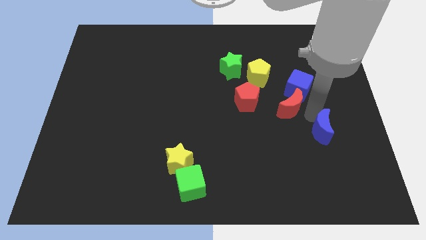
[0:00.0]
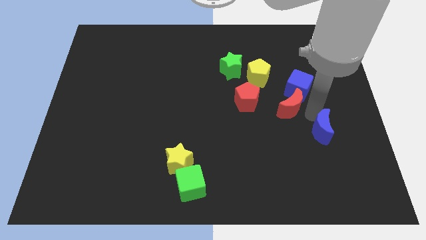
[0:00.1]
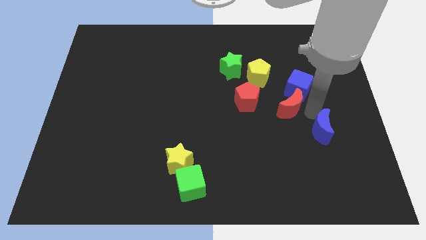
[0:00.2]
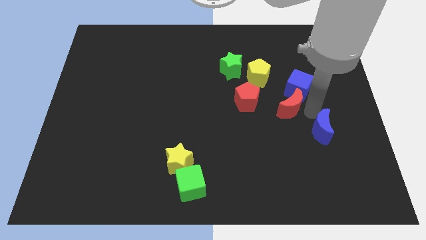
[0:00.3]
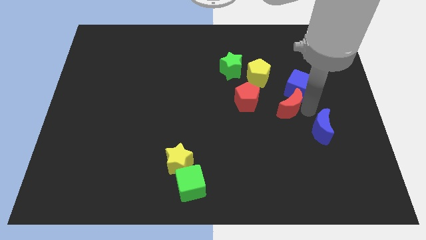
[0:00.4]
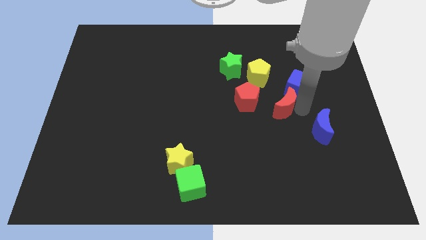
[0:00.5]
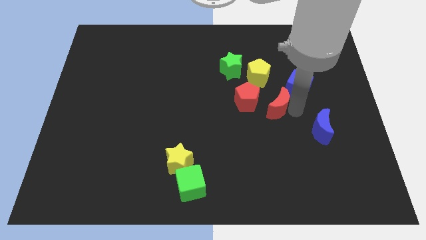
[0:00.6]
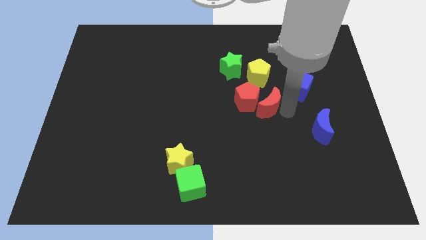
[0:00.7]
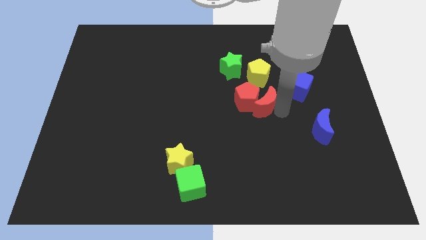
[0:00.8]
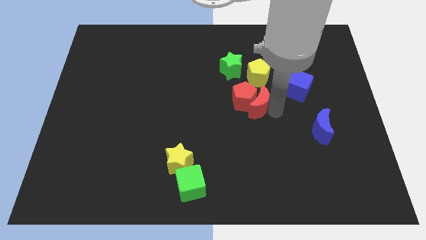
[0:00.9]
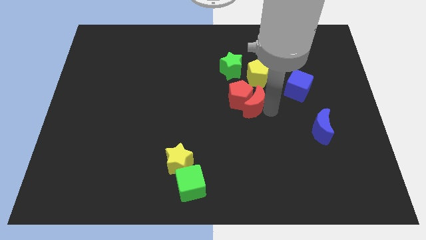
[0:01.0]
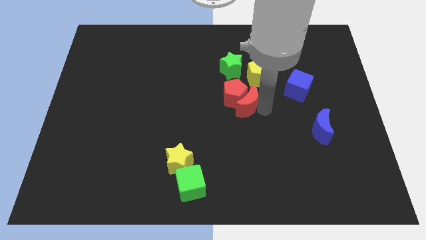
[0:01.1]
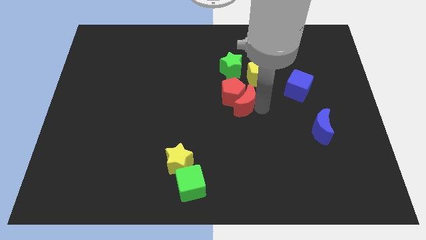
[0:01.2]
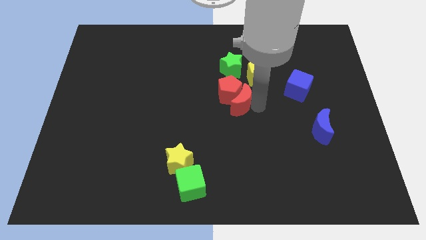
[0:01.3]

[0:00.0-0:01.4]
group up the red blocks below the green star

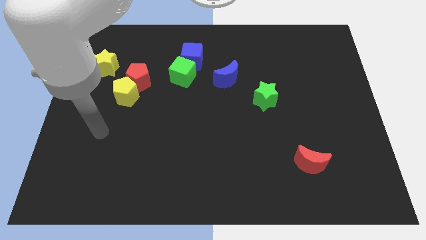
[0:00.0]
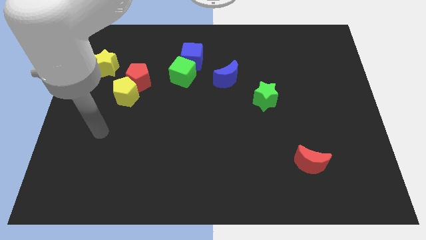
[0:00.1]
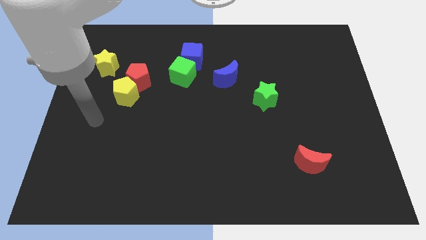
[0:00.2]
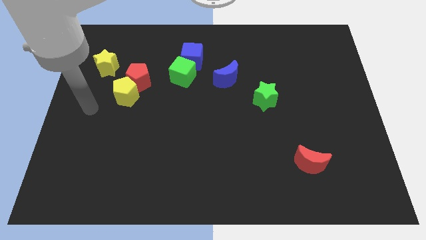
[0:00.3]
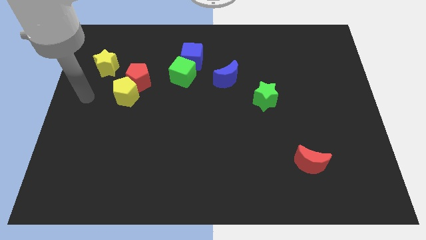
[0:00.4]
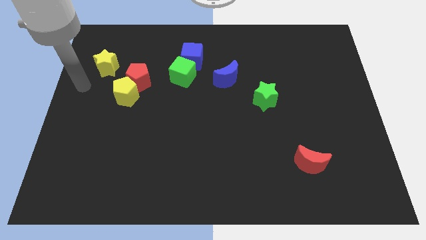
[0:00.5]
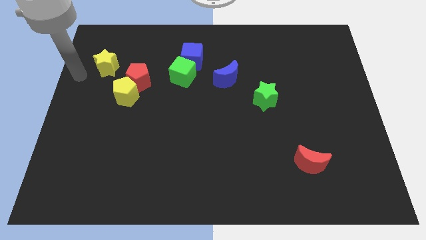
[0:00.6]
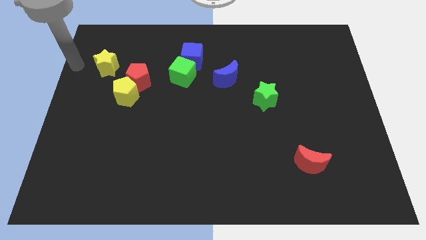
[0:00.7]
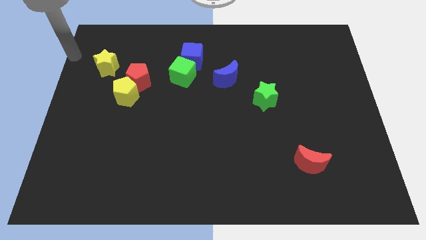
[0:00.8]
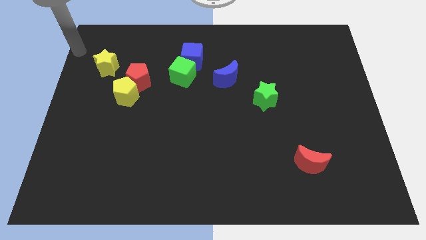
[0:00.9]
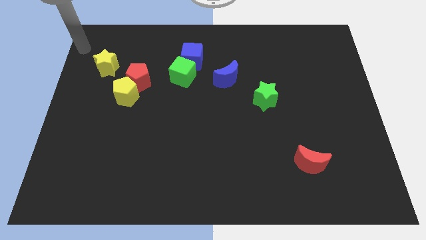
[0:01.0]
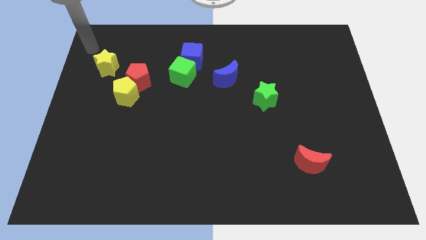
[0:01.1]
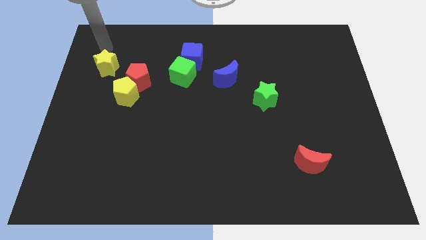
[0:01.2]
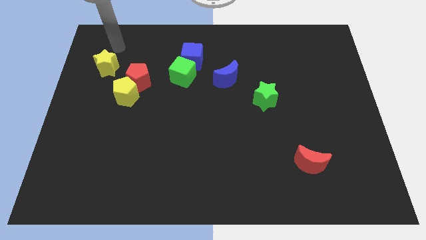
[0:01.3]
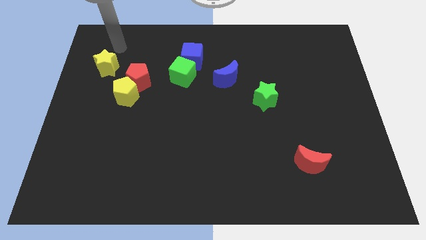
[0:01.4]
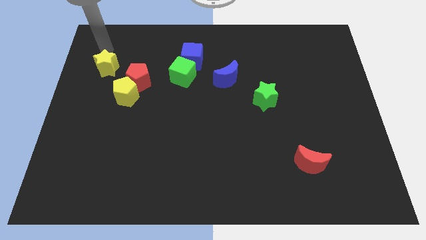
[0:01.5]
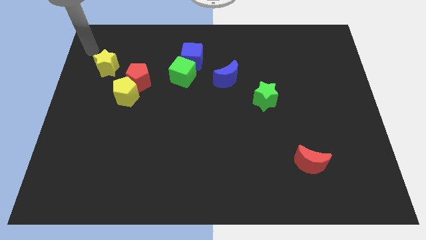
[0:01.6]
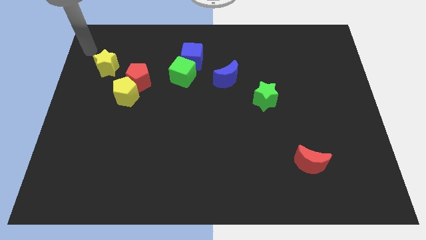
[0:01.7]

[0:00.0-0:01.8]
put your arm at the top left side of the yellow star

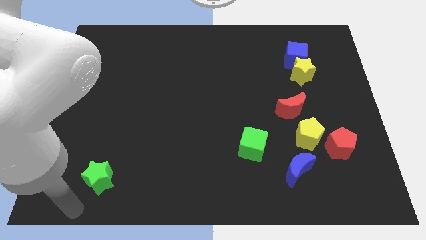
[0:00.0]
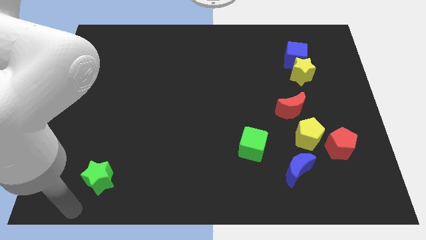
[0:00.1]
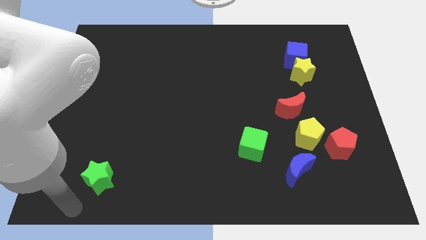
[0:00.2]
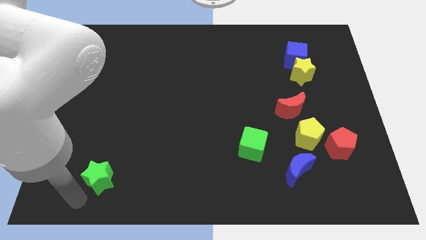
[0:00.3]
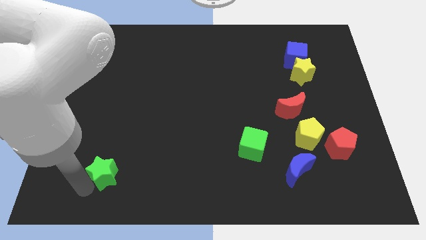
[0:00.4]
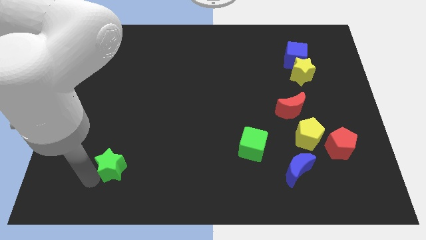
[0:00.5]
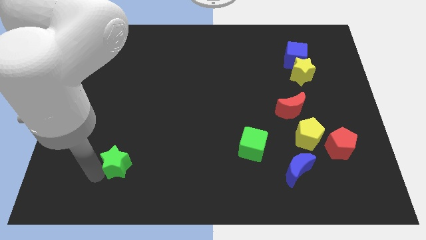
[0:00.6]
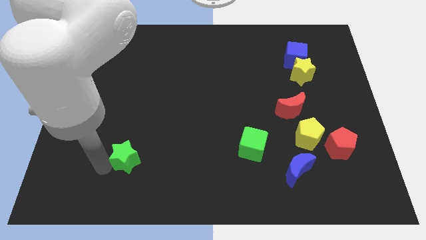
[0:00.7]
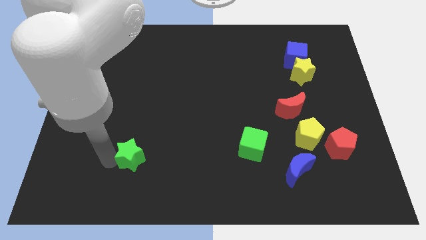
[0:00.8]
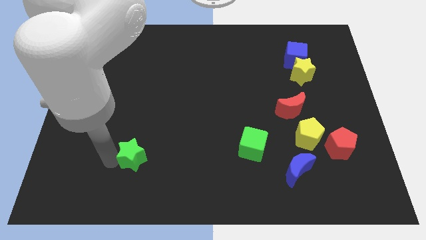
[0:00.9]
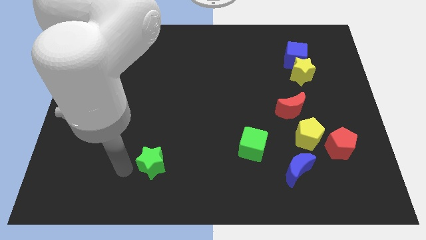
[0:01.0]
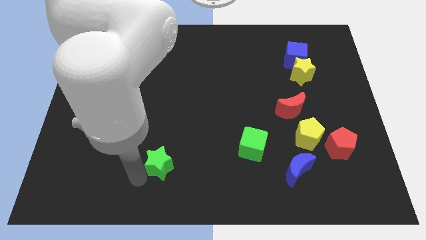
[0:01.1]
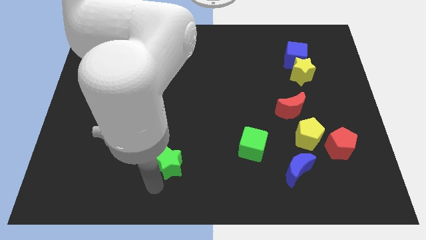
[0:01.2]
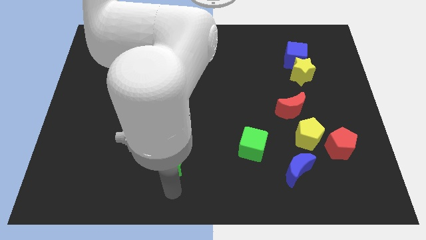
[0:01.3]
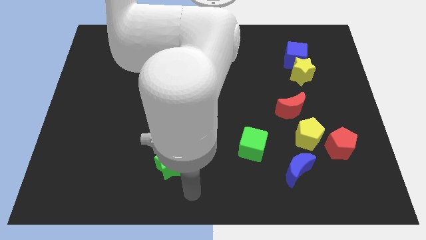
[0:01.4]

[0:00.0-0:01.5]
slide the green star towards the green cube

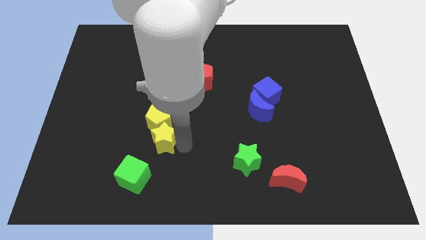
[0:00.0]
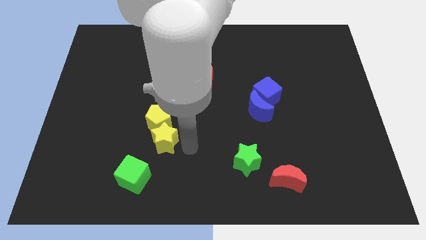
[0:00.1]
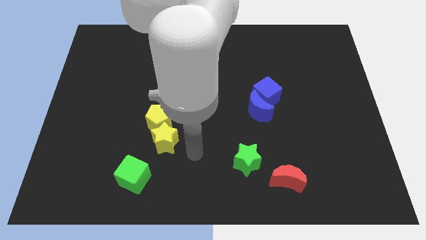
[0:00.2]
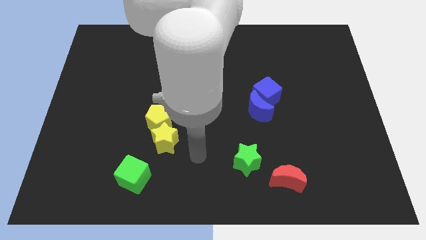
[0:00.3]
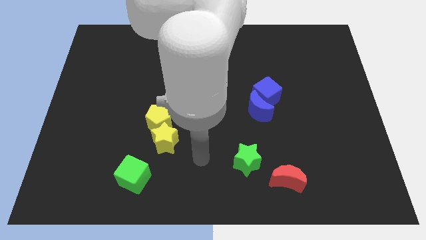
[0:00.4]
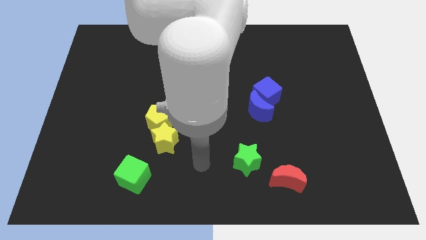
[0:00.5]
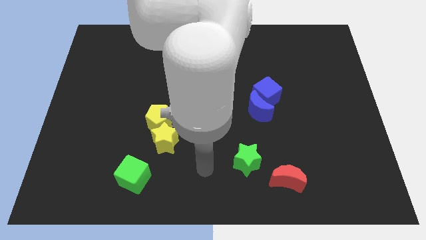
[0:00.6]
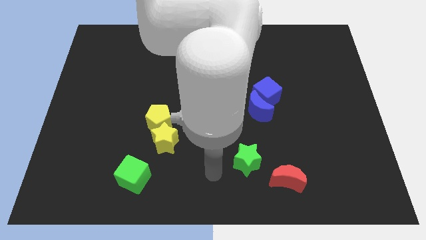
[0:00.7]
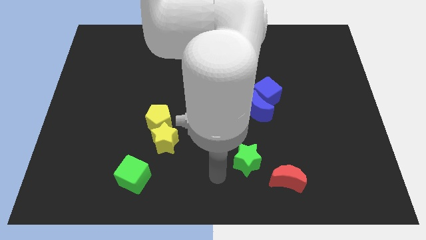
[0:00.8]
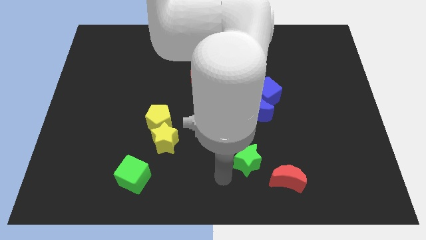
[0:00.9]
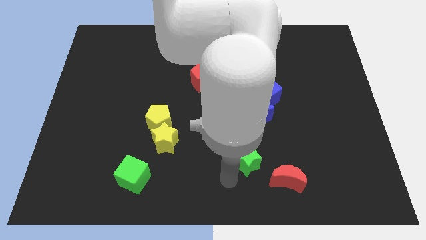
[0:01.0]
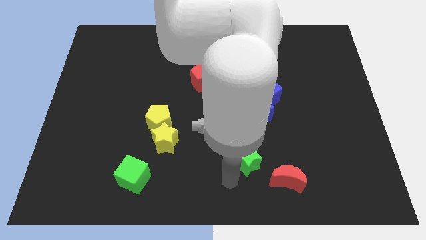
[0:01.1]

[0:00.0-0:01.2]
go away from the yellow star

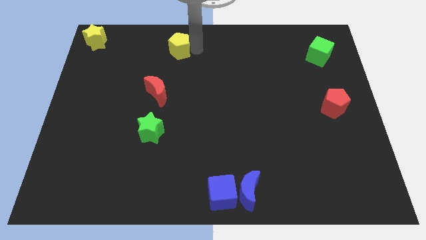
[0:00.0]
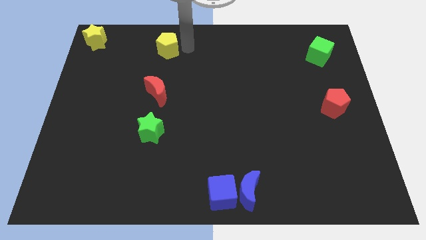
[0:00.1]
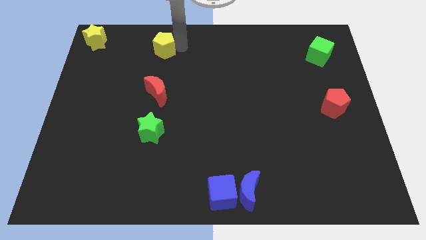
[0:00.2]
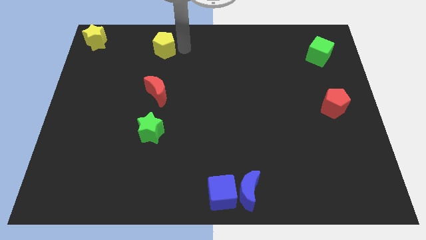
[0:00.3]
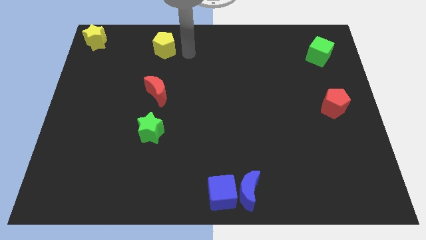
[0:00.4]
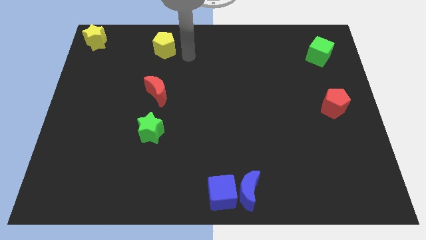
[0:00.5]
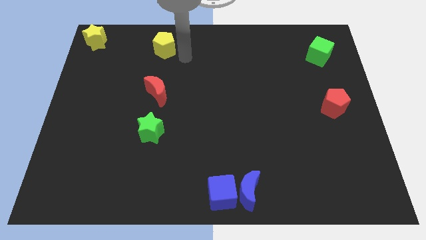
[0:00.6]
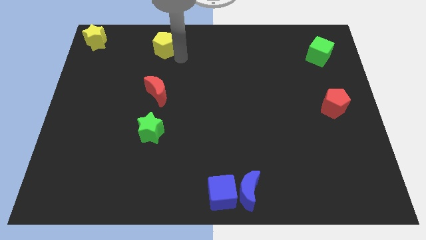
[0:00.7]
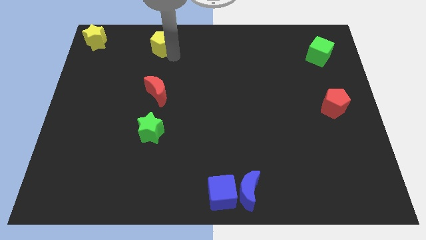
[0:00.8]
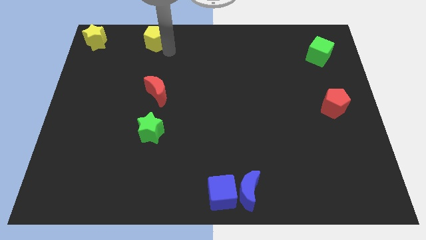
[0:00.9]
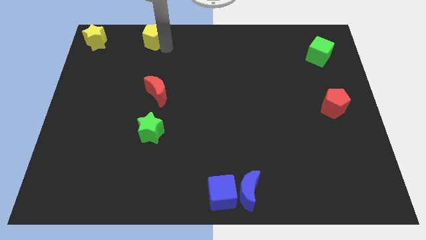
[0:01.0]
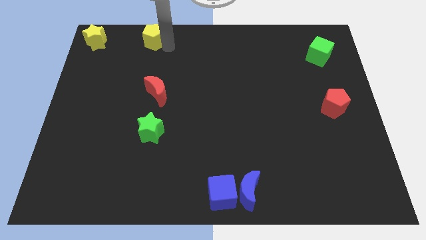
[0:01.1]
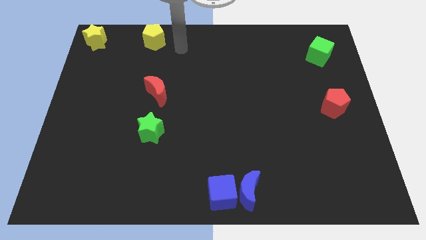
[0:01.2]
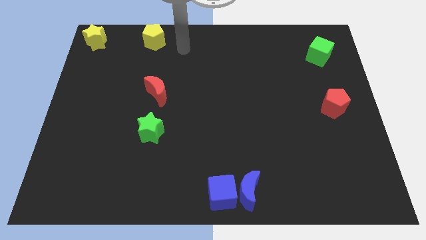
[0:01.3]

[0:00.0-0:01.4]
move the yellow pentagon vertically above the red moon

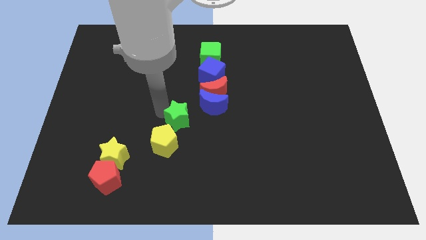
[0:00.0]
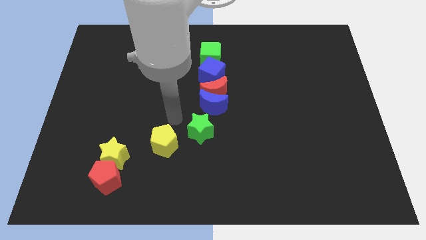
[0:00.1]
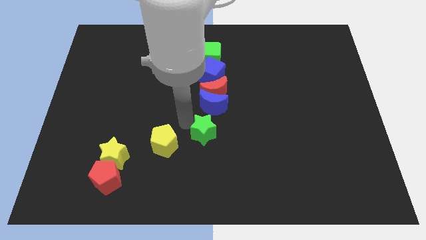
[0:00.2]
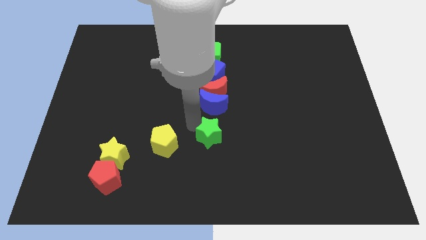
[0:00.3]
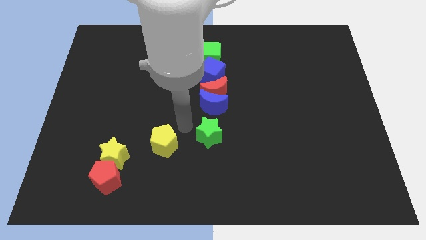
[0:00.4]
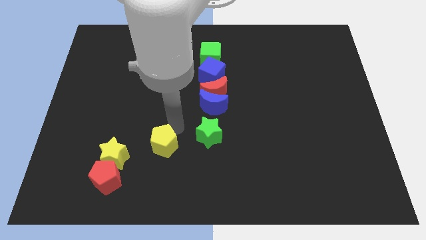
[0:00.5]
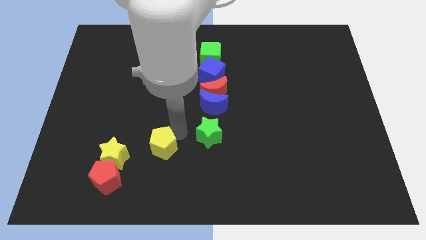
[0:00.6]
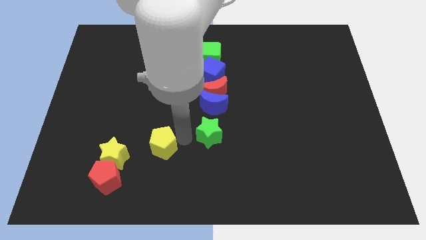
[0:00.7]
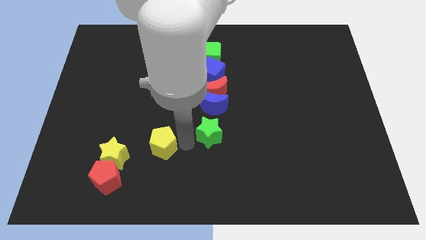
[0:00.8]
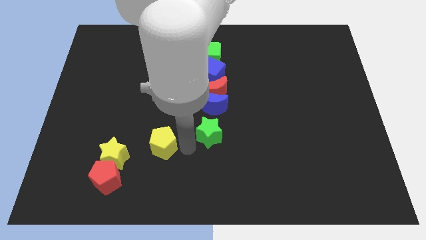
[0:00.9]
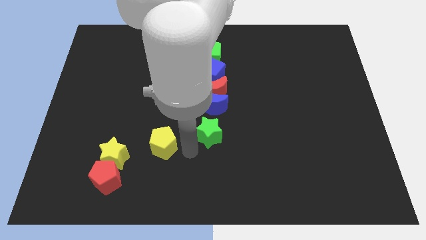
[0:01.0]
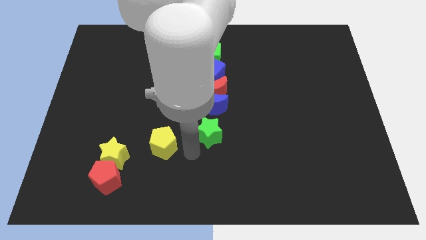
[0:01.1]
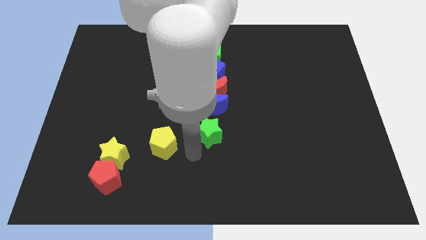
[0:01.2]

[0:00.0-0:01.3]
place the green star below the blue crescent
